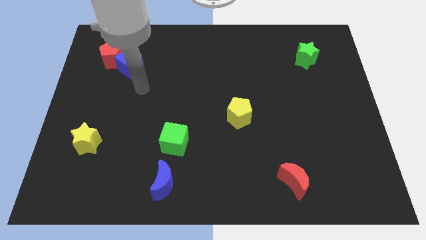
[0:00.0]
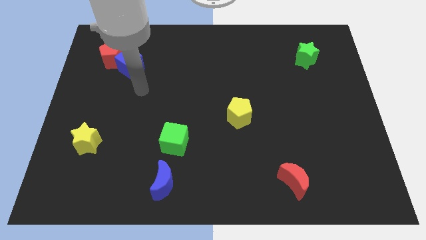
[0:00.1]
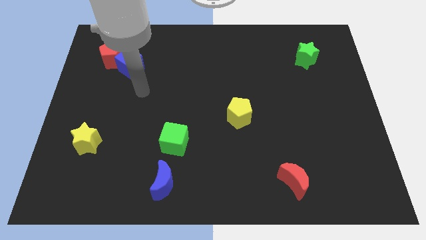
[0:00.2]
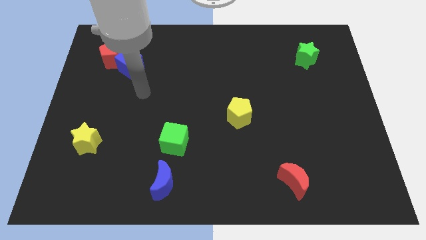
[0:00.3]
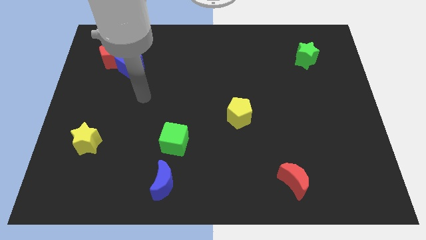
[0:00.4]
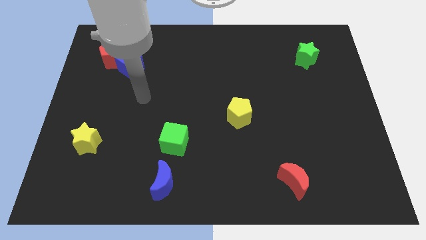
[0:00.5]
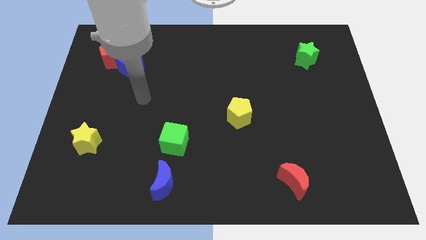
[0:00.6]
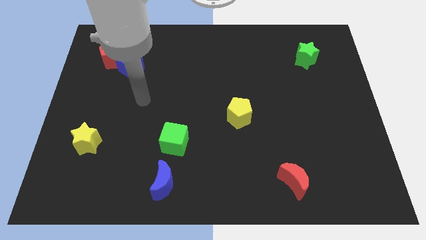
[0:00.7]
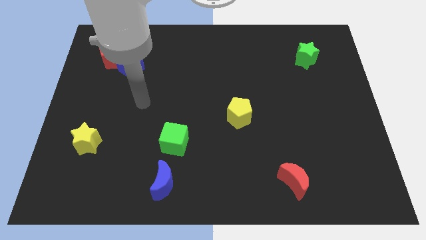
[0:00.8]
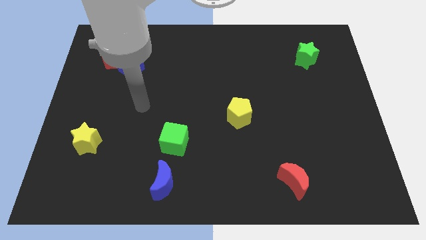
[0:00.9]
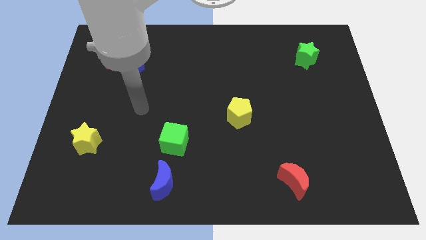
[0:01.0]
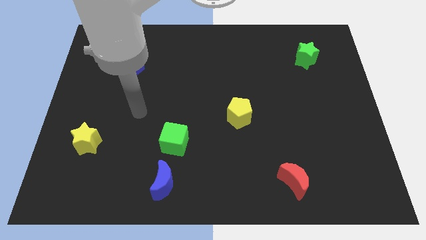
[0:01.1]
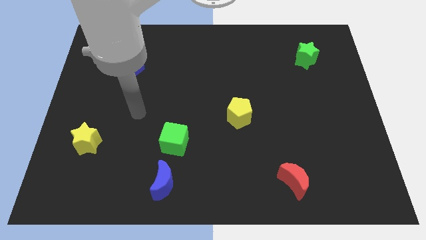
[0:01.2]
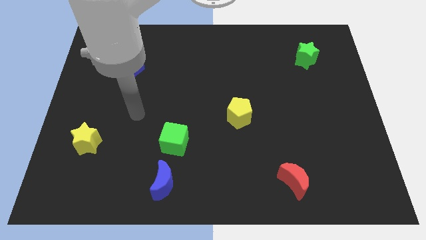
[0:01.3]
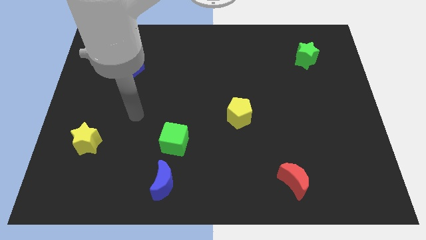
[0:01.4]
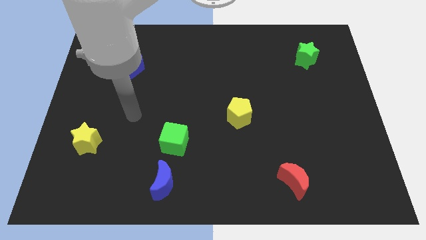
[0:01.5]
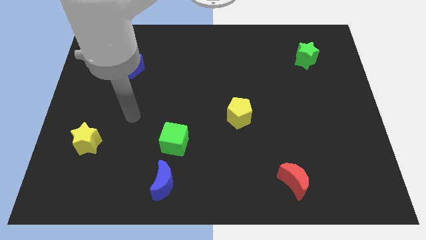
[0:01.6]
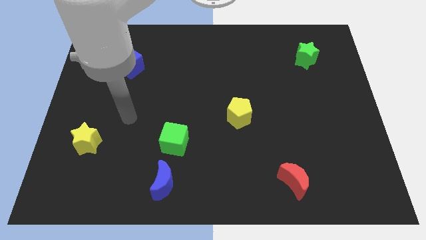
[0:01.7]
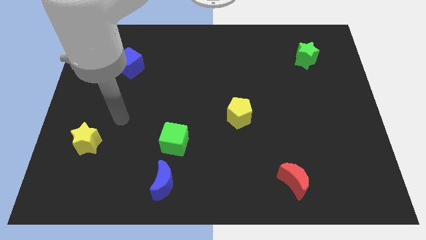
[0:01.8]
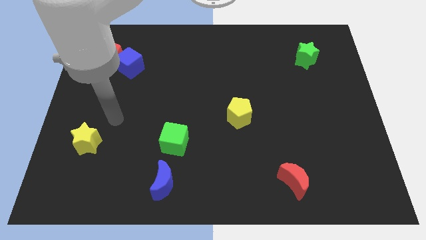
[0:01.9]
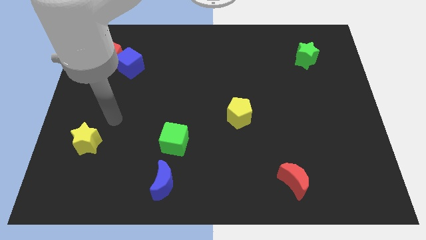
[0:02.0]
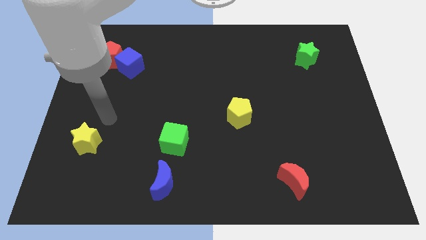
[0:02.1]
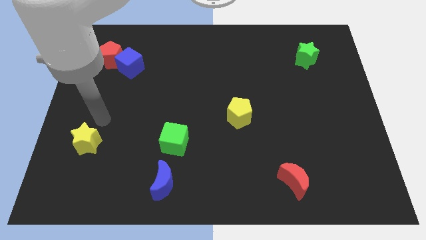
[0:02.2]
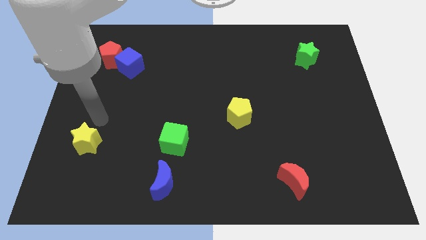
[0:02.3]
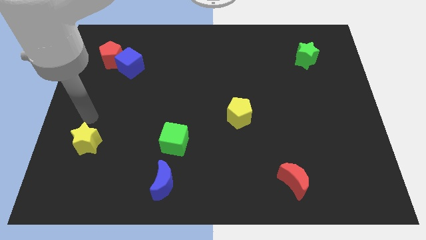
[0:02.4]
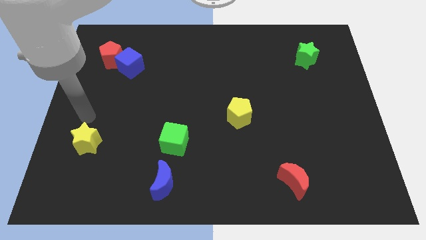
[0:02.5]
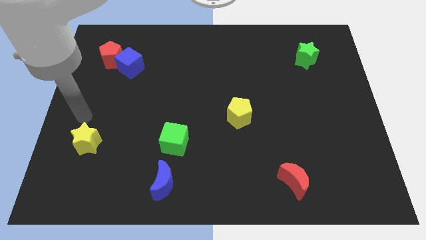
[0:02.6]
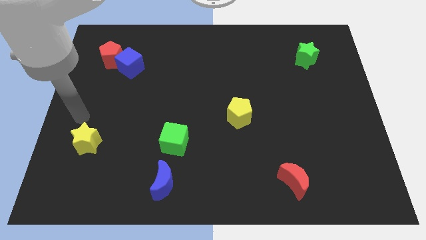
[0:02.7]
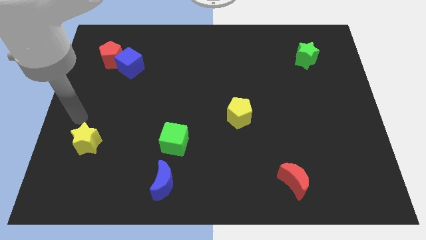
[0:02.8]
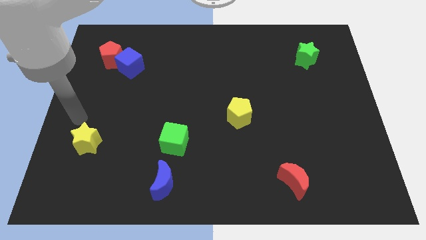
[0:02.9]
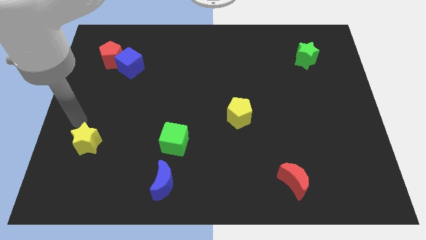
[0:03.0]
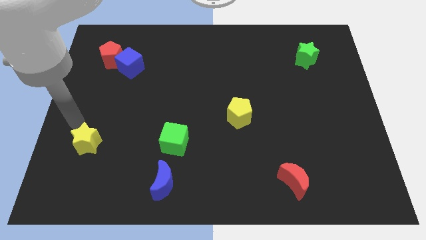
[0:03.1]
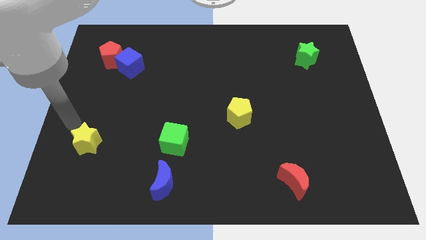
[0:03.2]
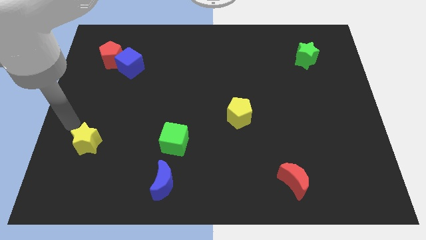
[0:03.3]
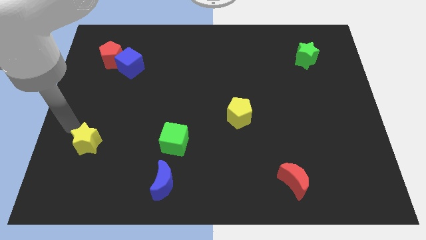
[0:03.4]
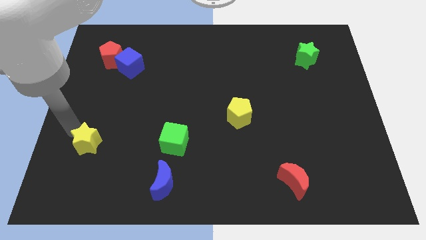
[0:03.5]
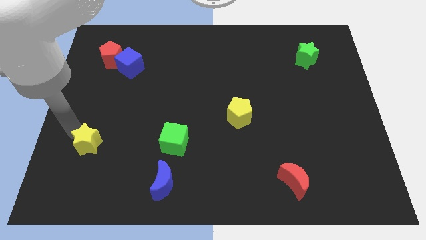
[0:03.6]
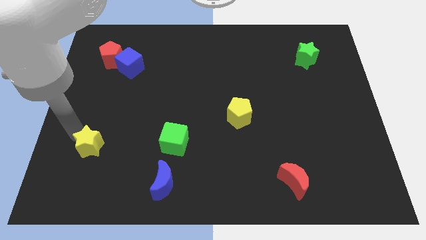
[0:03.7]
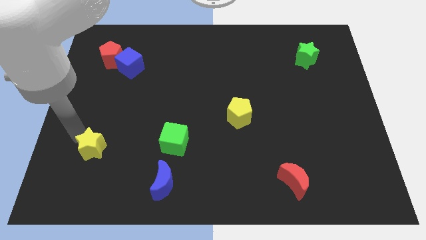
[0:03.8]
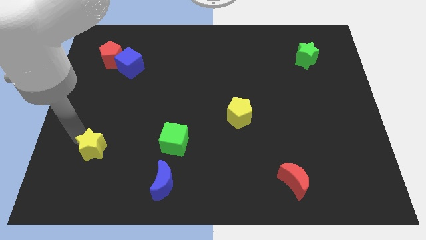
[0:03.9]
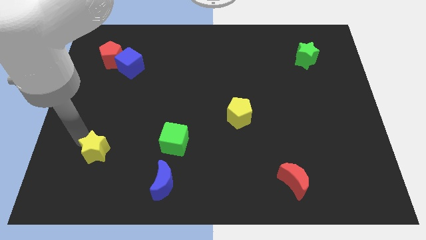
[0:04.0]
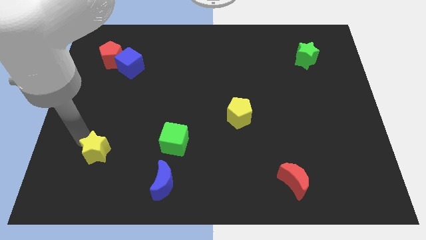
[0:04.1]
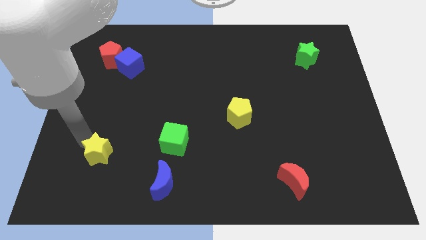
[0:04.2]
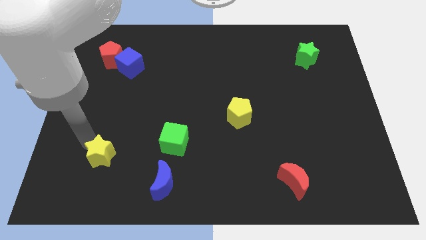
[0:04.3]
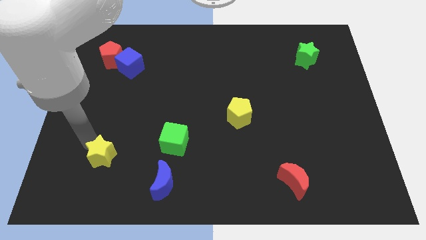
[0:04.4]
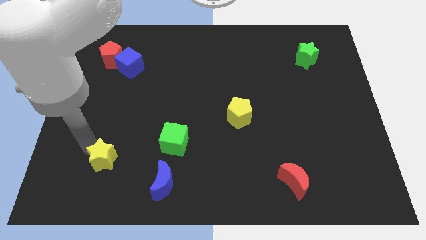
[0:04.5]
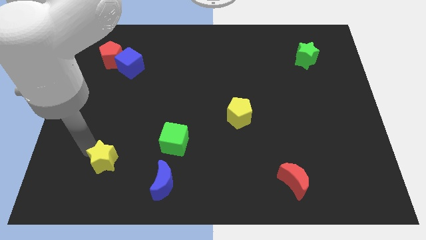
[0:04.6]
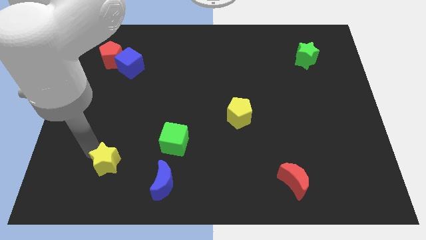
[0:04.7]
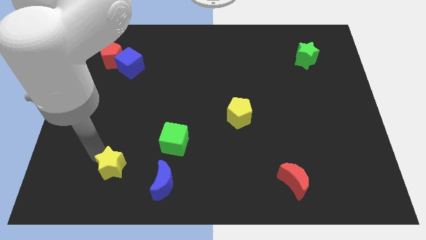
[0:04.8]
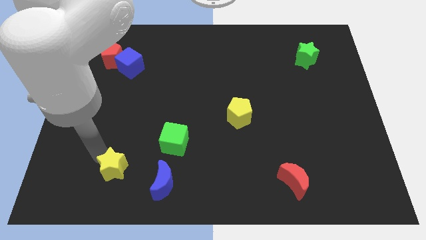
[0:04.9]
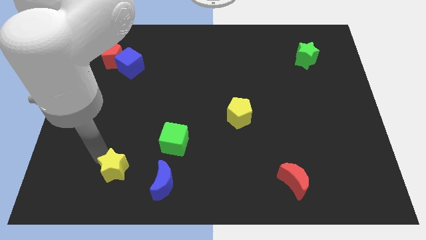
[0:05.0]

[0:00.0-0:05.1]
push the yellow star towards the blue crescent

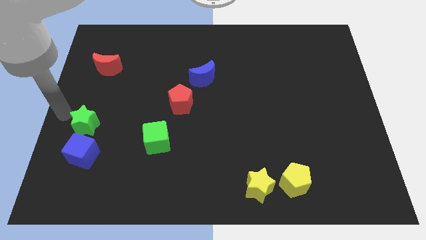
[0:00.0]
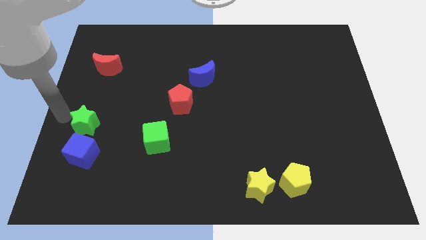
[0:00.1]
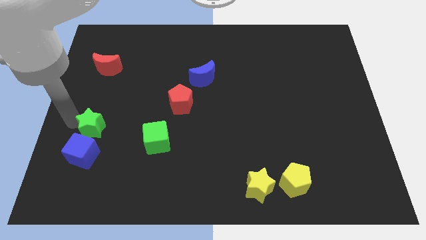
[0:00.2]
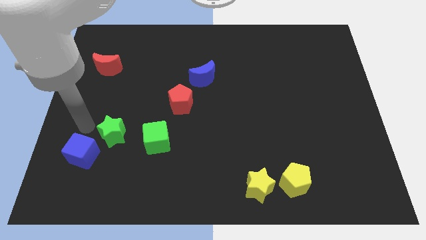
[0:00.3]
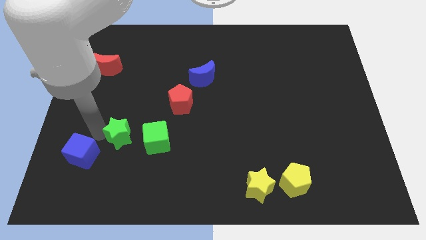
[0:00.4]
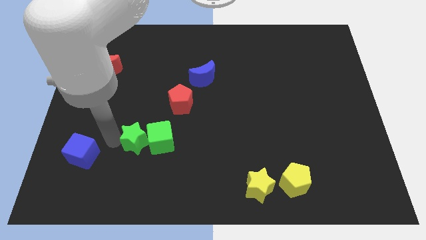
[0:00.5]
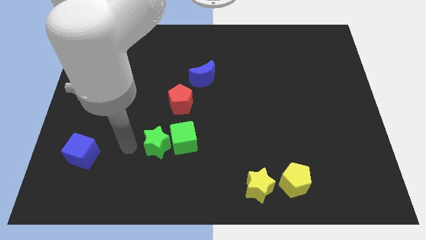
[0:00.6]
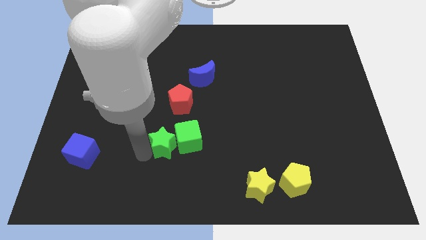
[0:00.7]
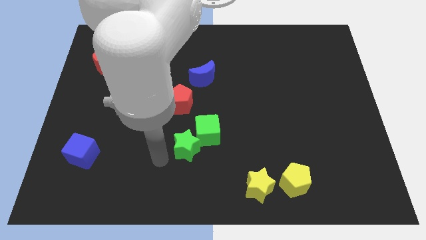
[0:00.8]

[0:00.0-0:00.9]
place green star to the bottom of the red pentagon

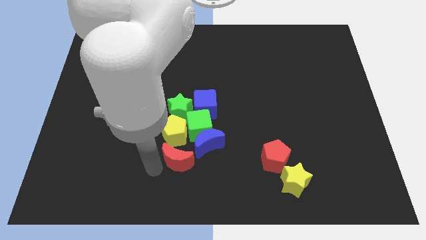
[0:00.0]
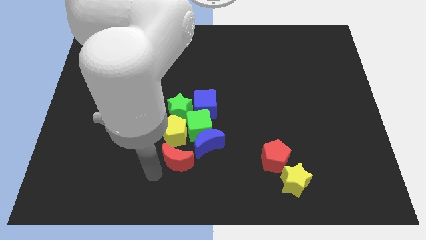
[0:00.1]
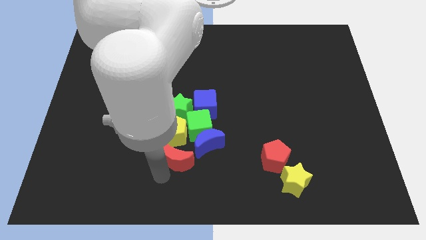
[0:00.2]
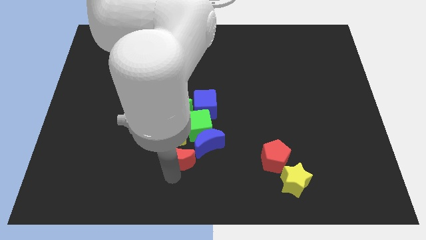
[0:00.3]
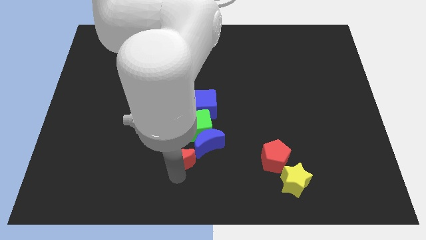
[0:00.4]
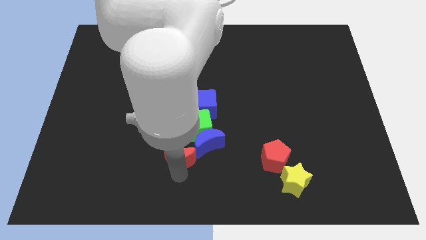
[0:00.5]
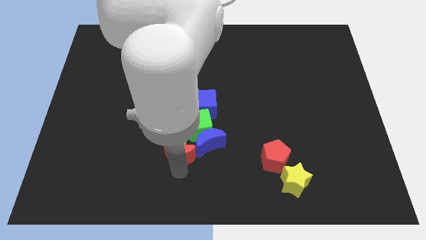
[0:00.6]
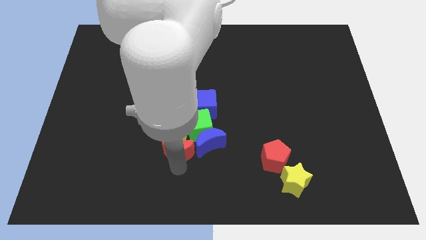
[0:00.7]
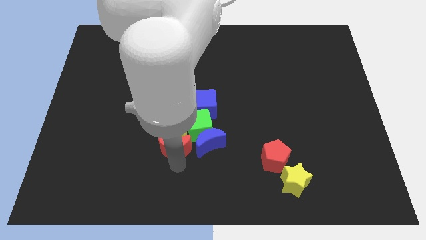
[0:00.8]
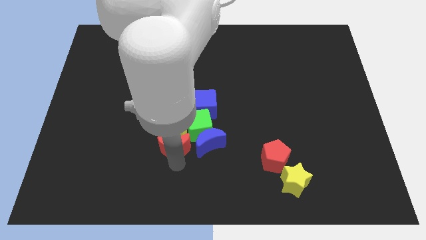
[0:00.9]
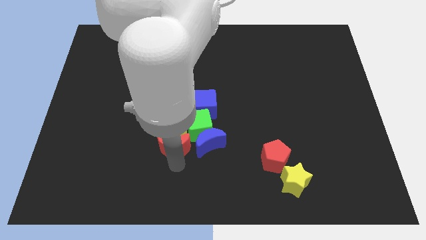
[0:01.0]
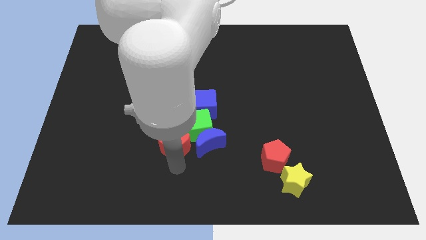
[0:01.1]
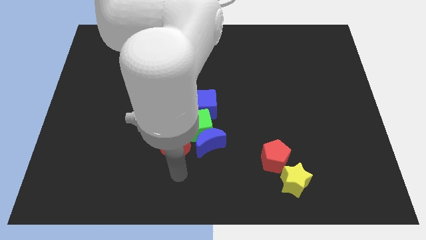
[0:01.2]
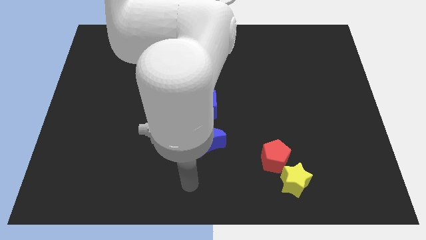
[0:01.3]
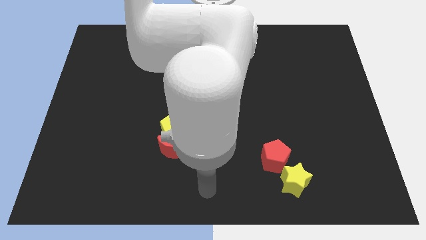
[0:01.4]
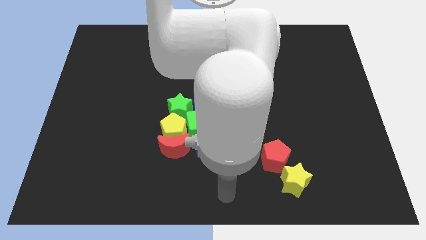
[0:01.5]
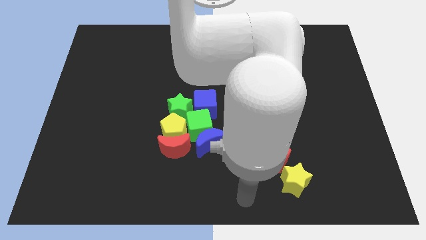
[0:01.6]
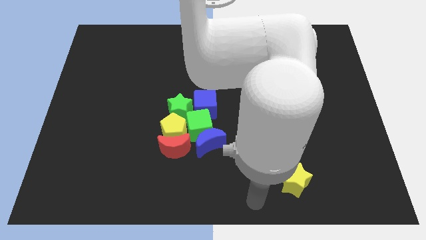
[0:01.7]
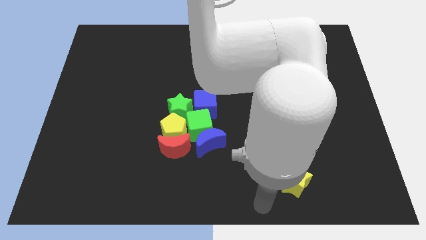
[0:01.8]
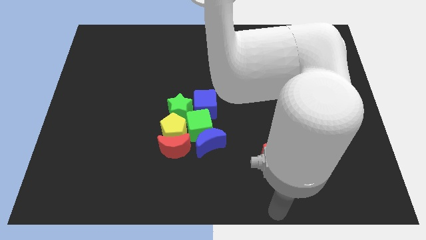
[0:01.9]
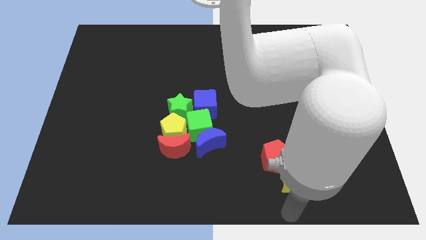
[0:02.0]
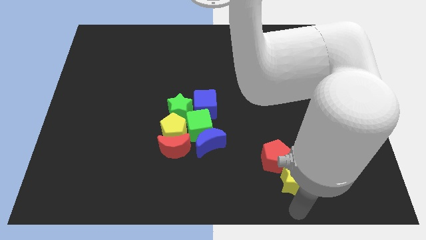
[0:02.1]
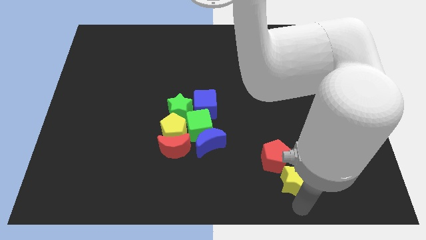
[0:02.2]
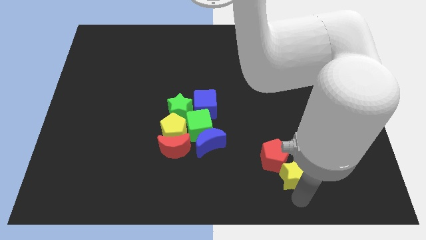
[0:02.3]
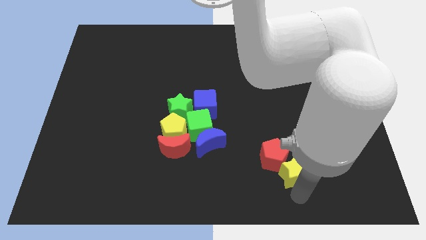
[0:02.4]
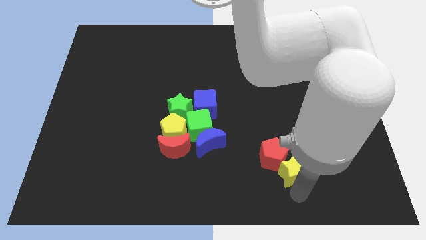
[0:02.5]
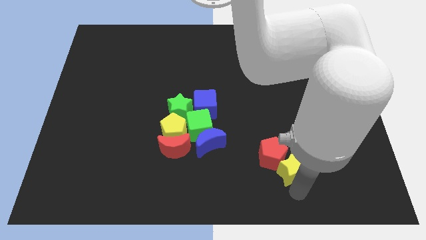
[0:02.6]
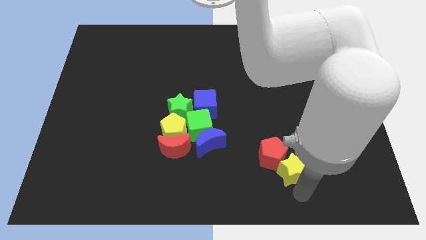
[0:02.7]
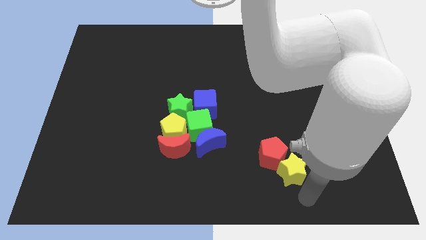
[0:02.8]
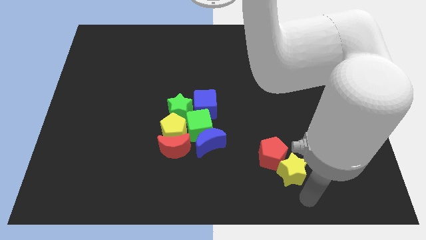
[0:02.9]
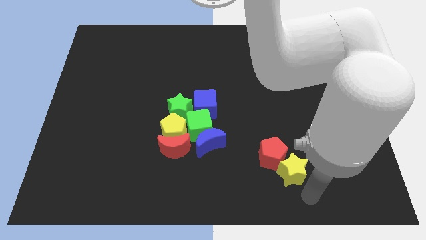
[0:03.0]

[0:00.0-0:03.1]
push yellow star into red pentagon slightly
